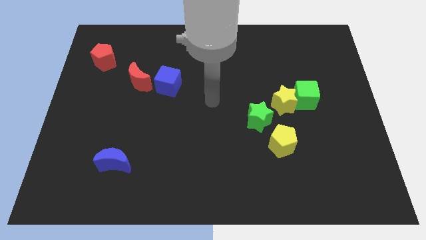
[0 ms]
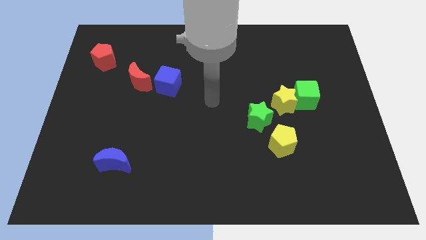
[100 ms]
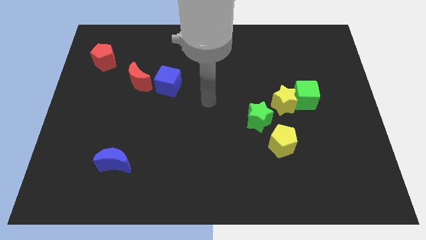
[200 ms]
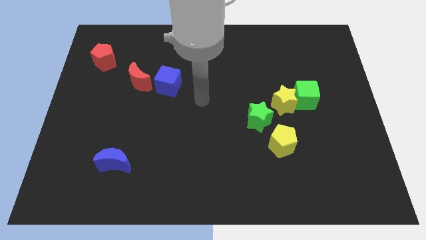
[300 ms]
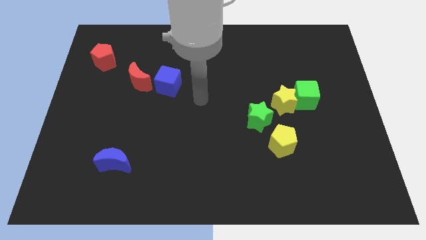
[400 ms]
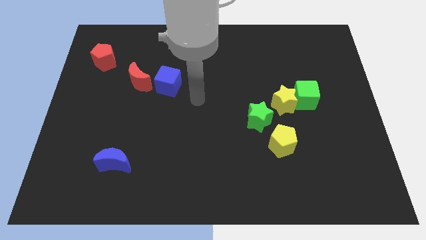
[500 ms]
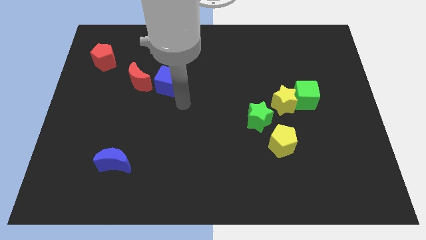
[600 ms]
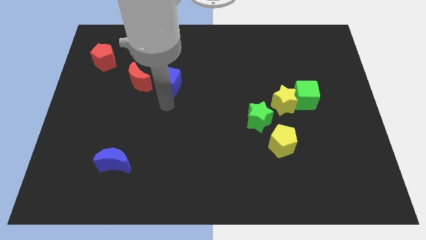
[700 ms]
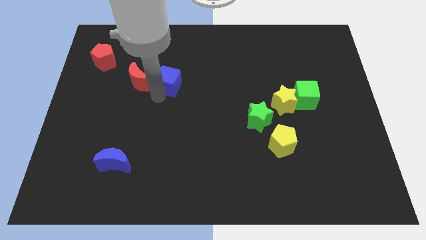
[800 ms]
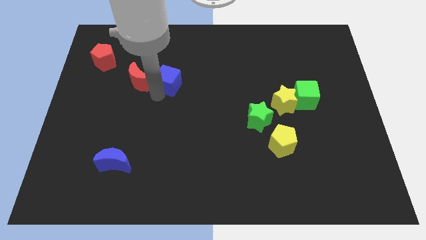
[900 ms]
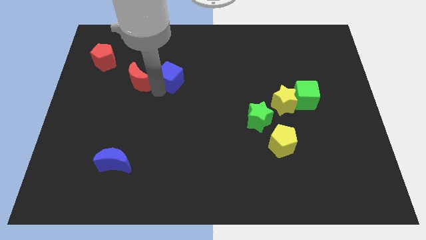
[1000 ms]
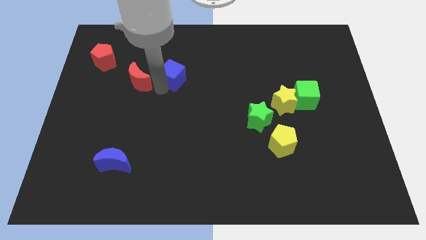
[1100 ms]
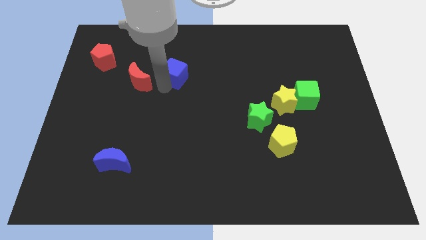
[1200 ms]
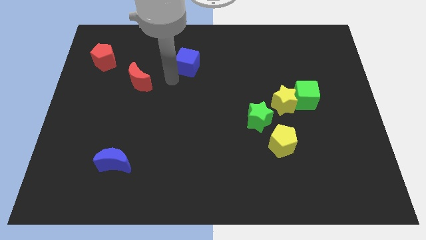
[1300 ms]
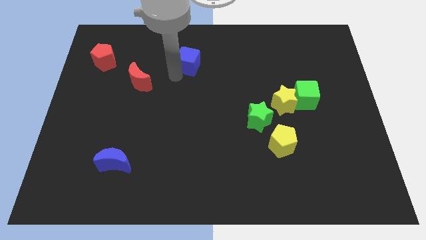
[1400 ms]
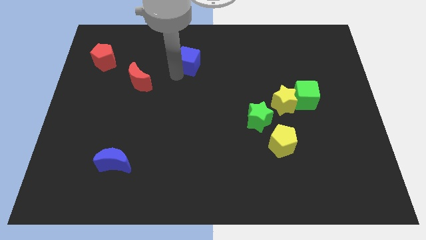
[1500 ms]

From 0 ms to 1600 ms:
push the blue cube towards the top side of the board

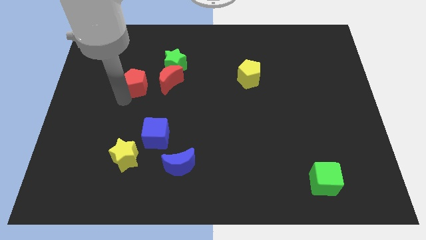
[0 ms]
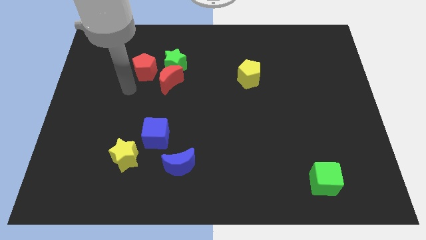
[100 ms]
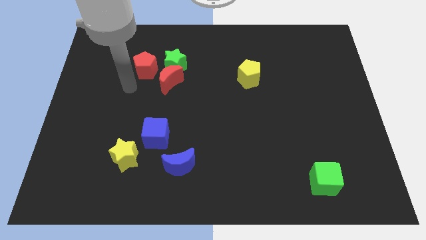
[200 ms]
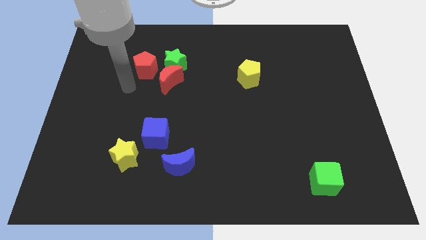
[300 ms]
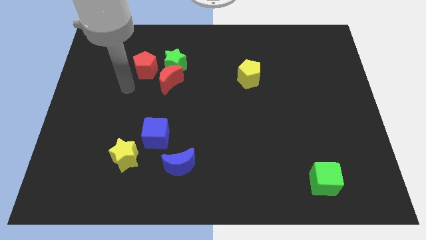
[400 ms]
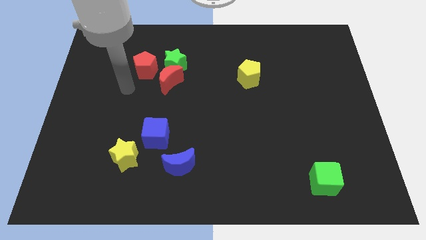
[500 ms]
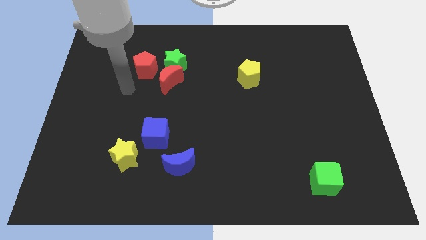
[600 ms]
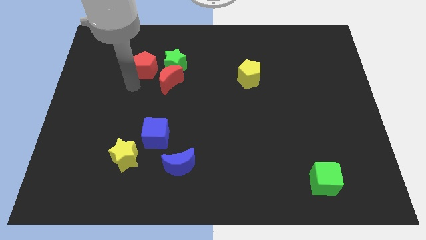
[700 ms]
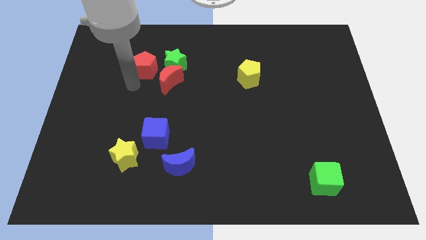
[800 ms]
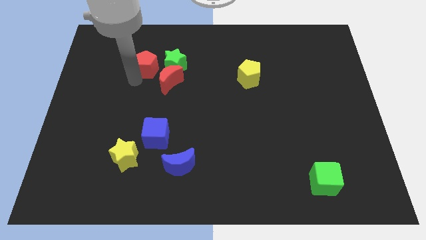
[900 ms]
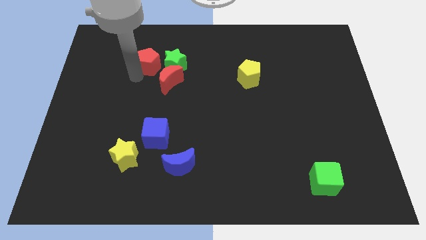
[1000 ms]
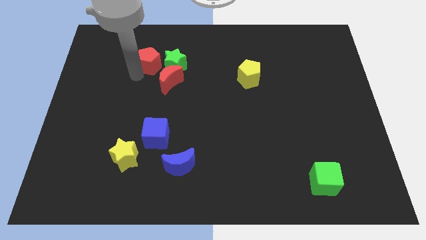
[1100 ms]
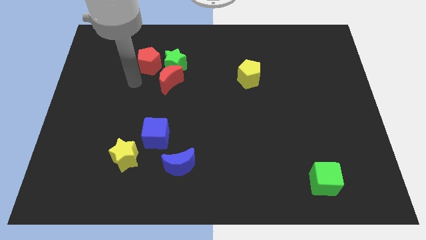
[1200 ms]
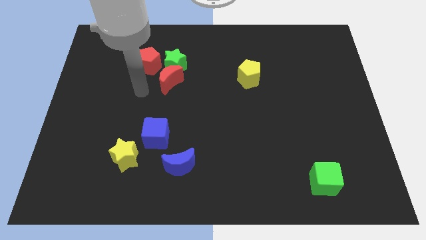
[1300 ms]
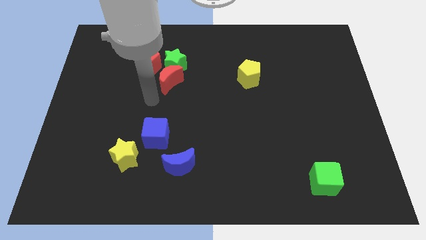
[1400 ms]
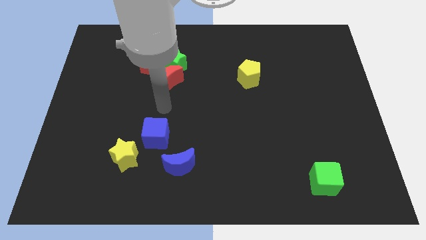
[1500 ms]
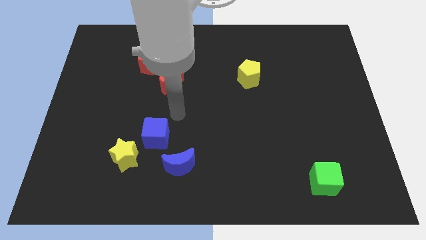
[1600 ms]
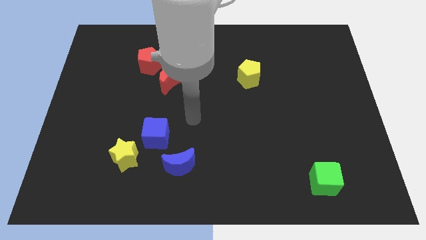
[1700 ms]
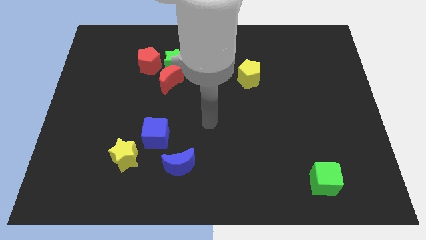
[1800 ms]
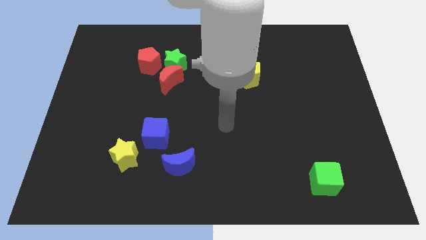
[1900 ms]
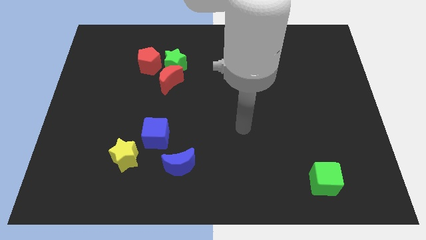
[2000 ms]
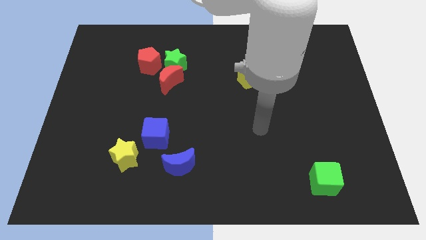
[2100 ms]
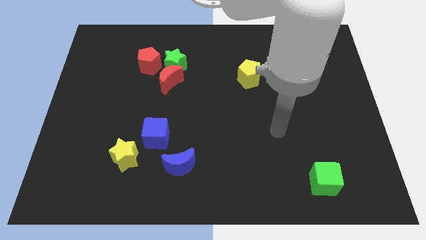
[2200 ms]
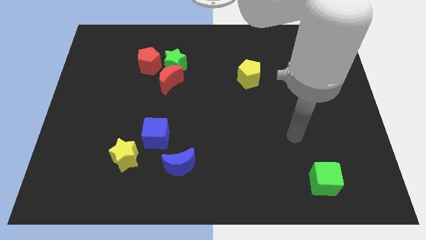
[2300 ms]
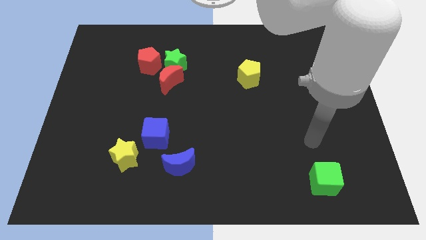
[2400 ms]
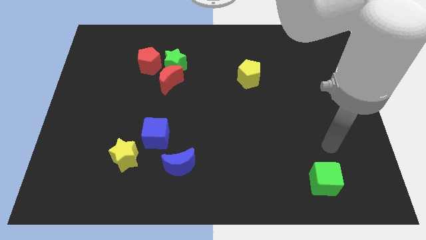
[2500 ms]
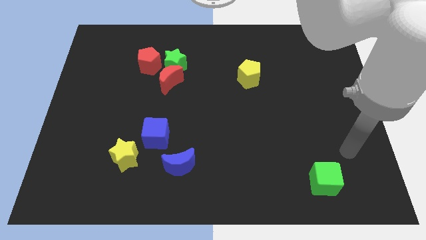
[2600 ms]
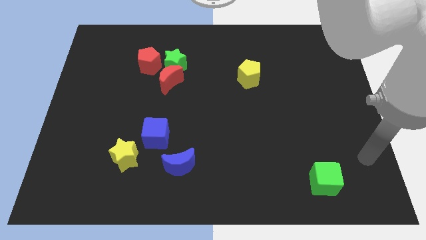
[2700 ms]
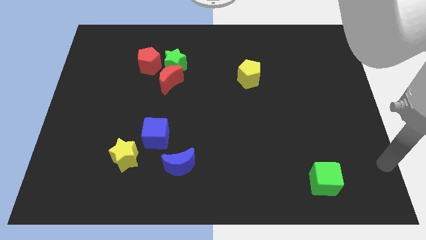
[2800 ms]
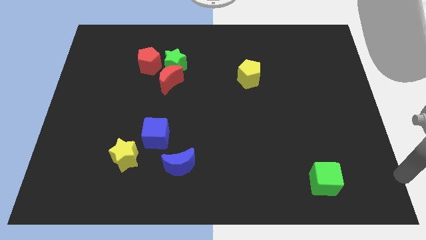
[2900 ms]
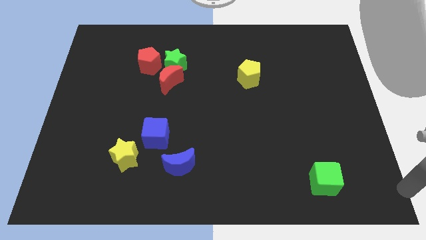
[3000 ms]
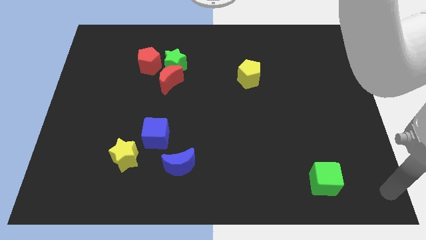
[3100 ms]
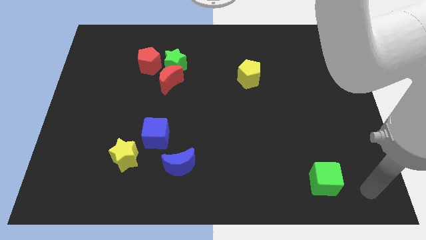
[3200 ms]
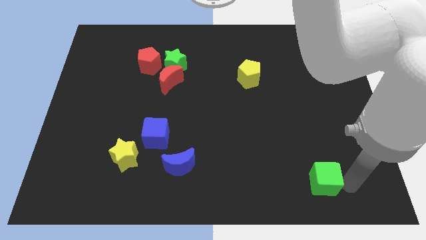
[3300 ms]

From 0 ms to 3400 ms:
move your arm to the right of the green cube

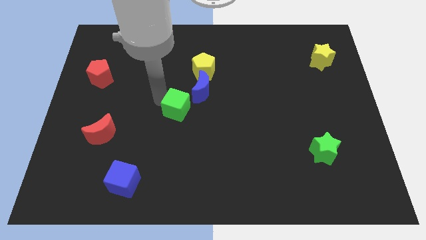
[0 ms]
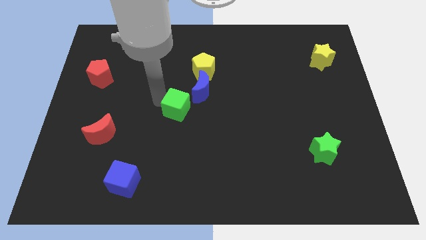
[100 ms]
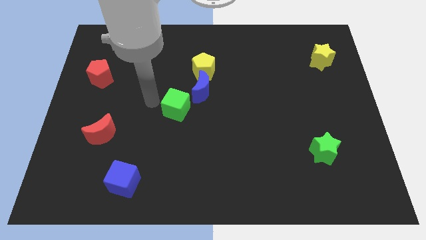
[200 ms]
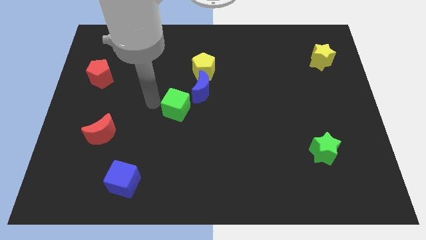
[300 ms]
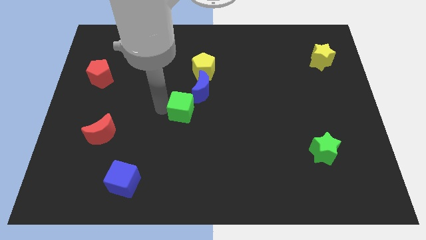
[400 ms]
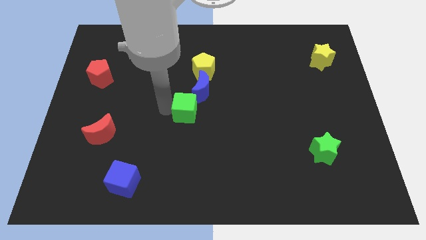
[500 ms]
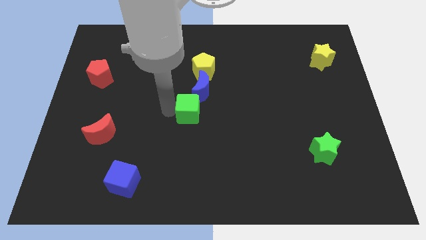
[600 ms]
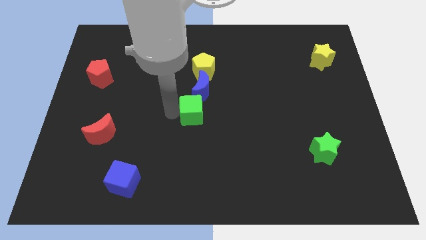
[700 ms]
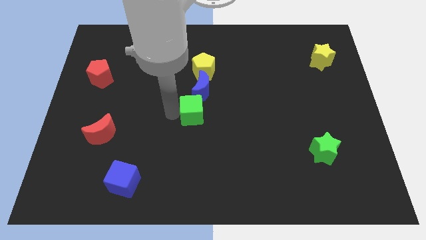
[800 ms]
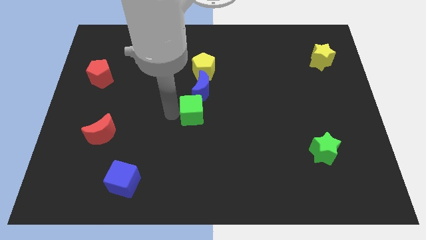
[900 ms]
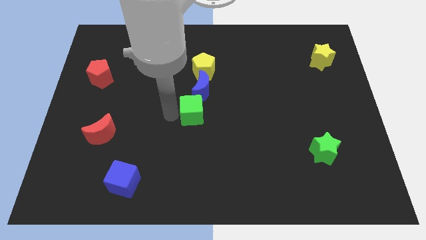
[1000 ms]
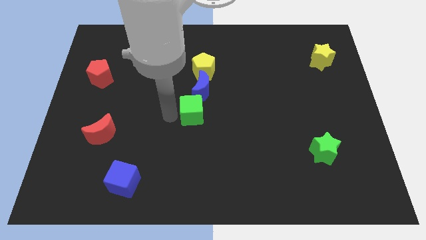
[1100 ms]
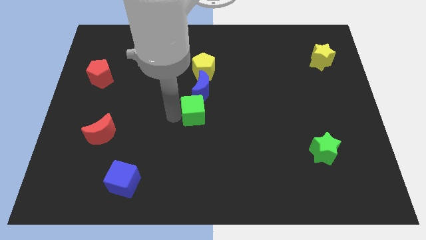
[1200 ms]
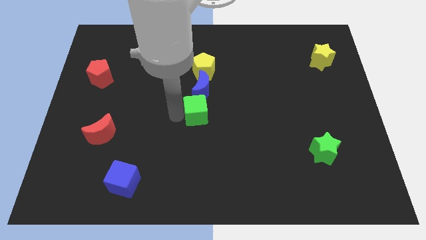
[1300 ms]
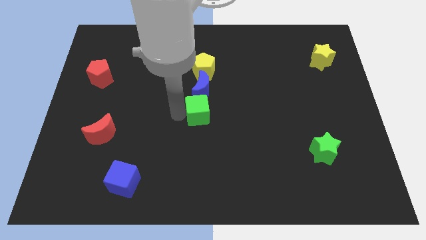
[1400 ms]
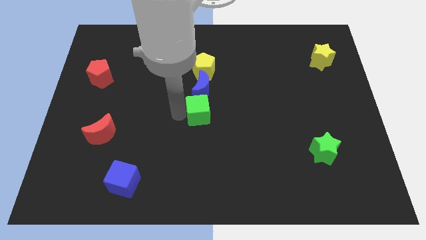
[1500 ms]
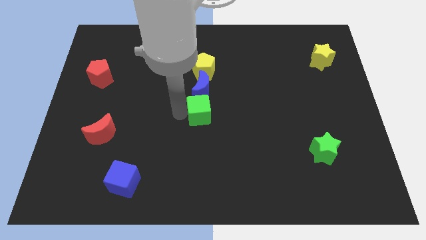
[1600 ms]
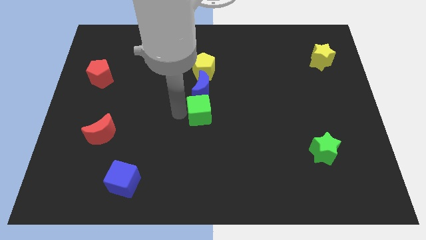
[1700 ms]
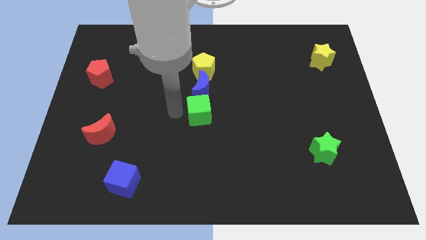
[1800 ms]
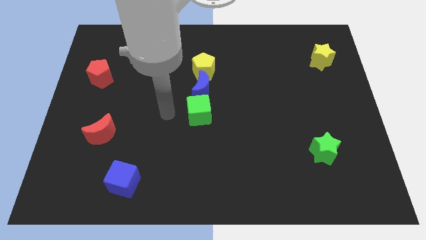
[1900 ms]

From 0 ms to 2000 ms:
place the green cube to the bottom of the blue moon

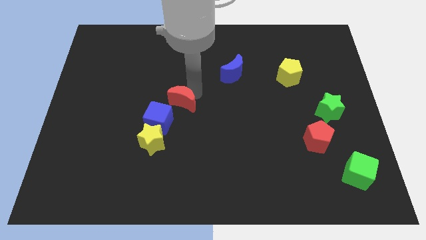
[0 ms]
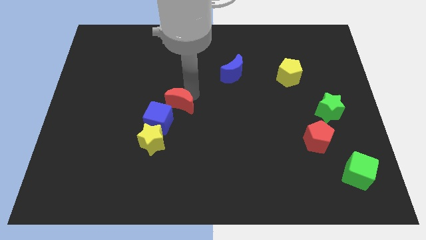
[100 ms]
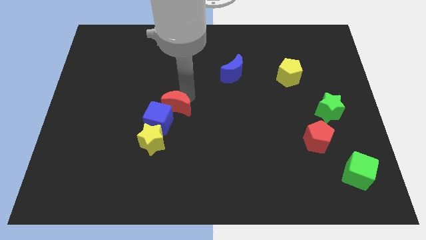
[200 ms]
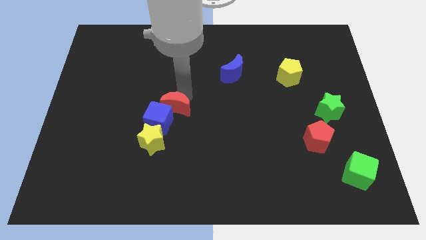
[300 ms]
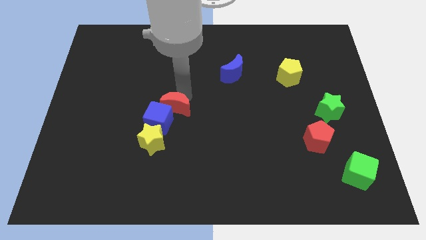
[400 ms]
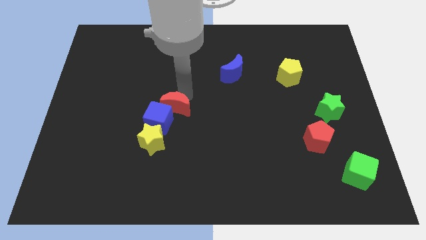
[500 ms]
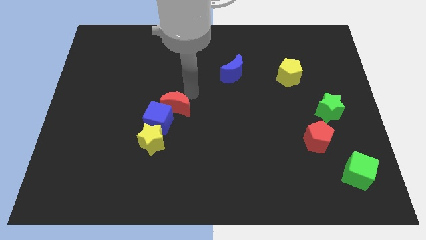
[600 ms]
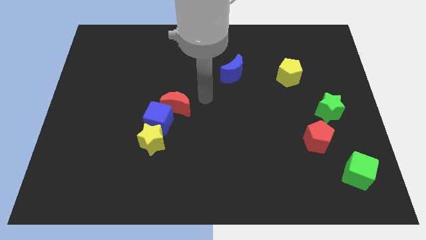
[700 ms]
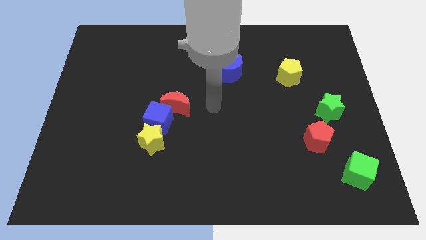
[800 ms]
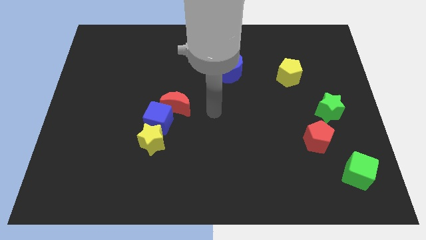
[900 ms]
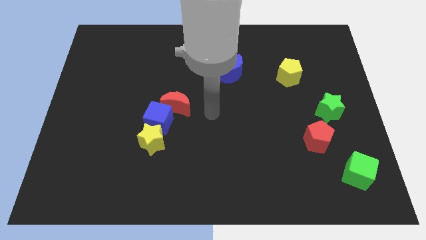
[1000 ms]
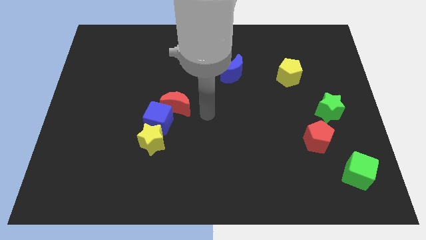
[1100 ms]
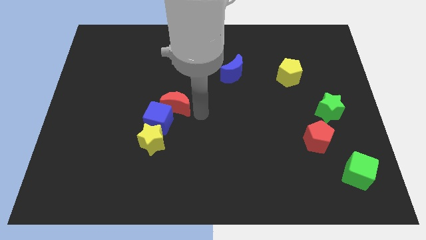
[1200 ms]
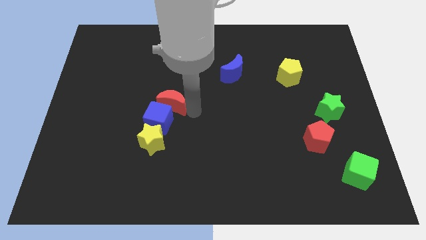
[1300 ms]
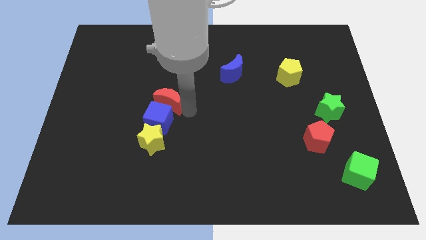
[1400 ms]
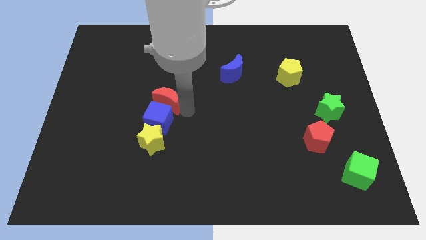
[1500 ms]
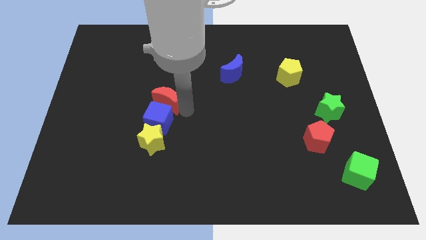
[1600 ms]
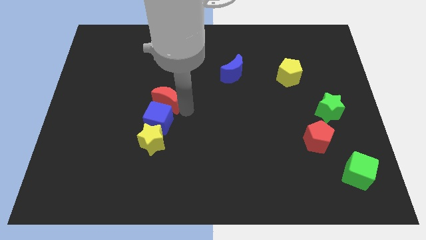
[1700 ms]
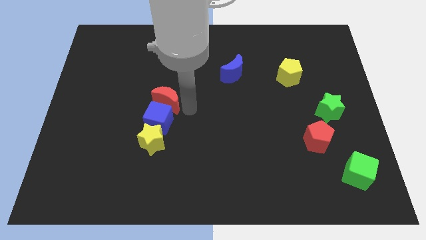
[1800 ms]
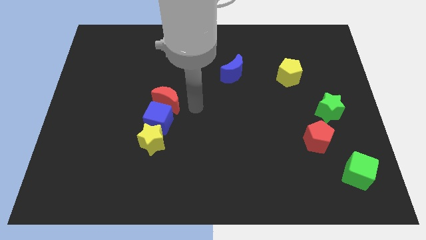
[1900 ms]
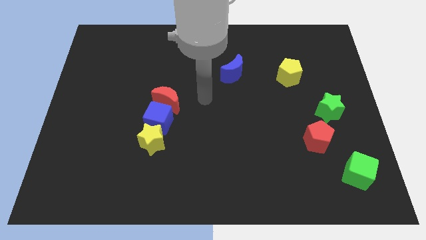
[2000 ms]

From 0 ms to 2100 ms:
move the red crescent to the top of the blue cube
